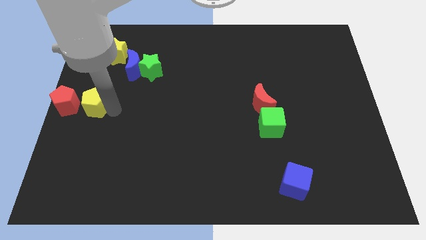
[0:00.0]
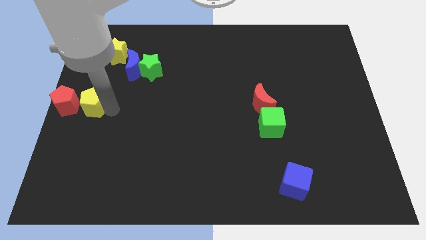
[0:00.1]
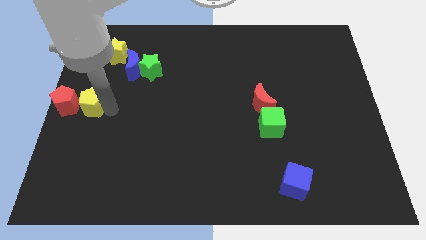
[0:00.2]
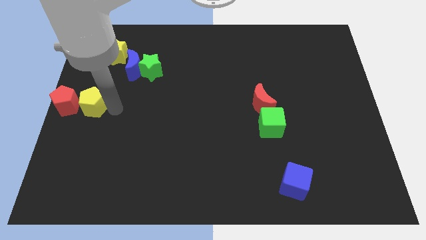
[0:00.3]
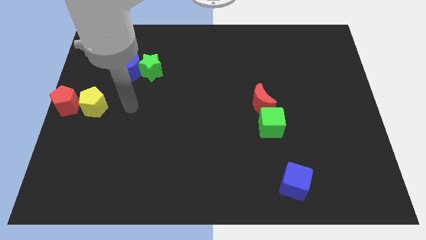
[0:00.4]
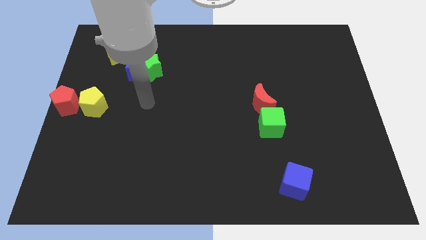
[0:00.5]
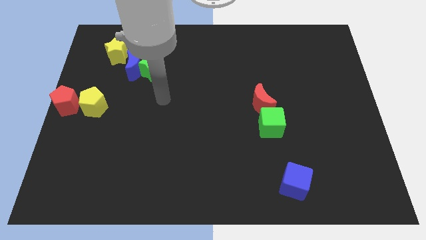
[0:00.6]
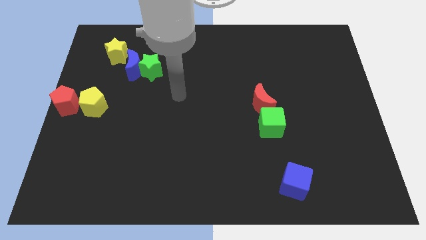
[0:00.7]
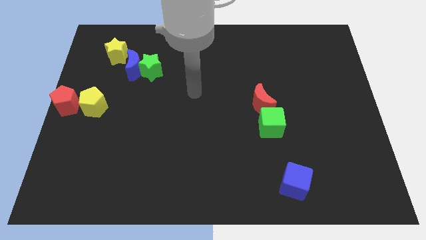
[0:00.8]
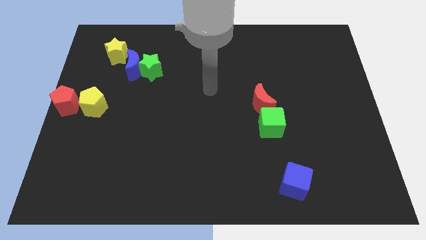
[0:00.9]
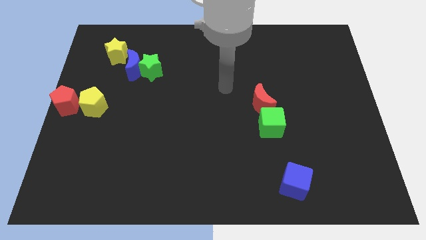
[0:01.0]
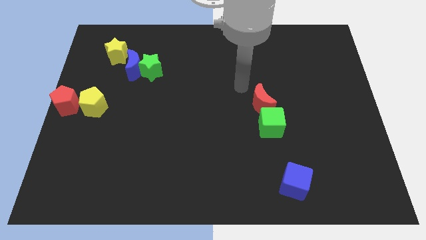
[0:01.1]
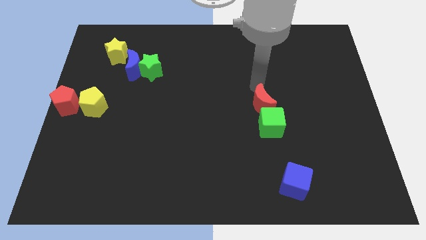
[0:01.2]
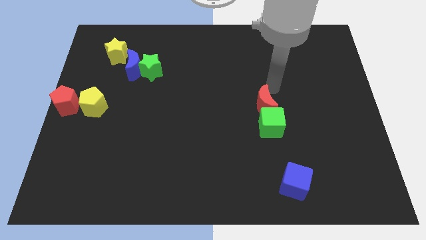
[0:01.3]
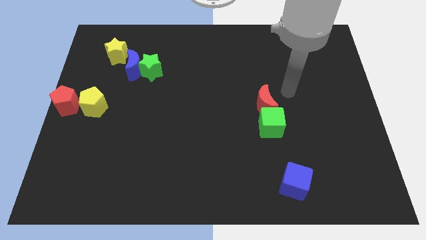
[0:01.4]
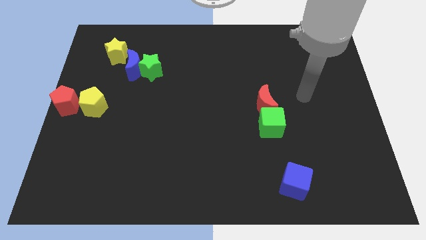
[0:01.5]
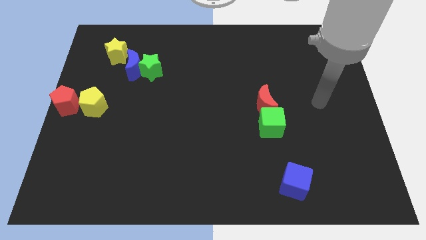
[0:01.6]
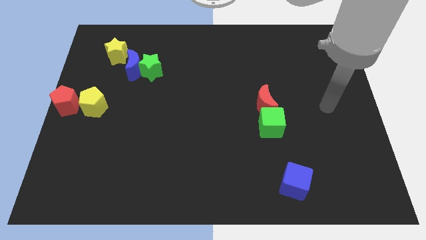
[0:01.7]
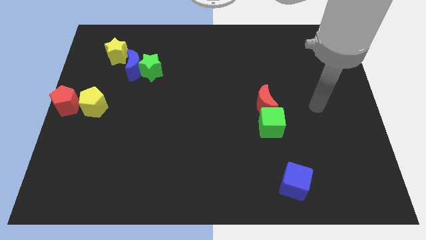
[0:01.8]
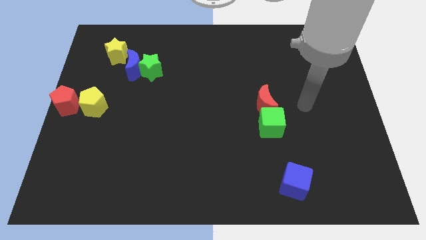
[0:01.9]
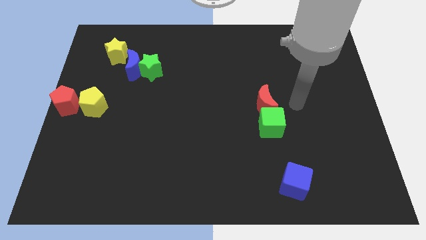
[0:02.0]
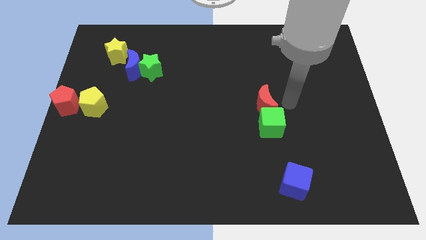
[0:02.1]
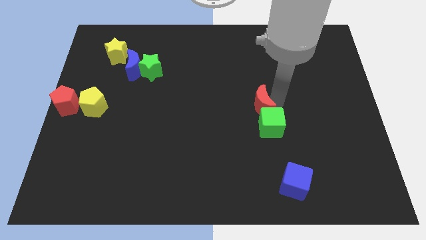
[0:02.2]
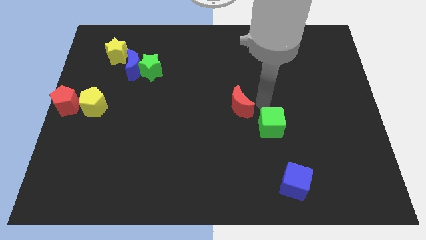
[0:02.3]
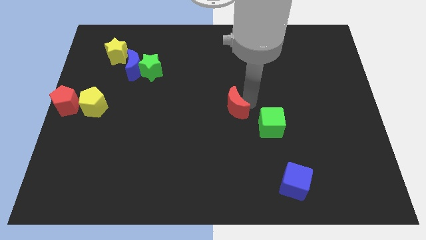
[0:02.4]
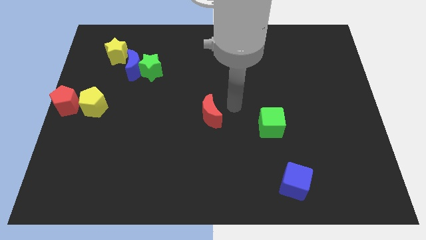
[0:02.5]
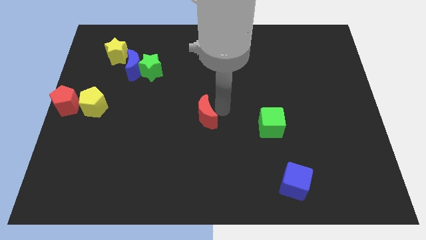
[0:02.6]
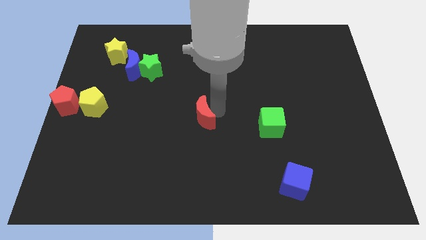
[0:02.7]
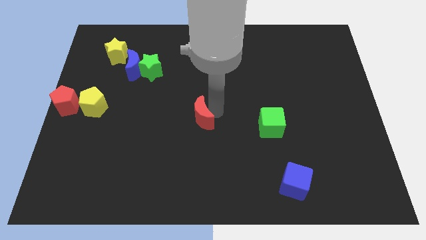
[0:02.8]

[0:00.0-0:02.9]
separate the red moon from the green cube

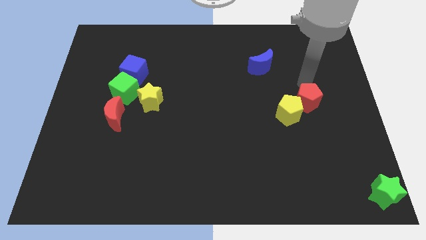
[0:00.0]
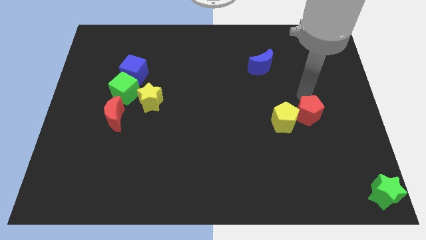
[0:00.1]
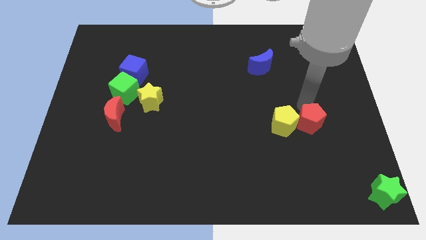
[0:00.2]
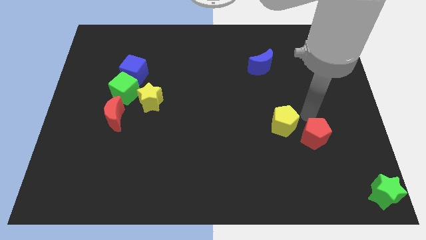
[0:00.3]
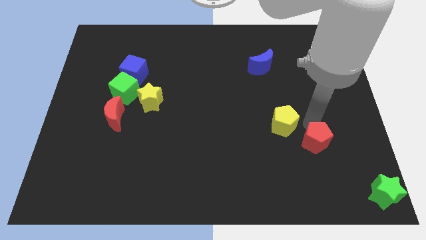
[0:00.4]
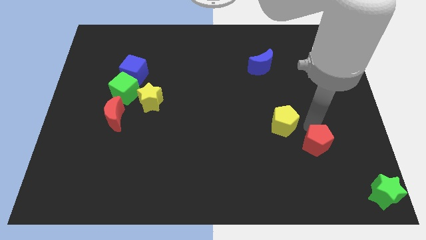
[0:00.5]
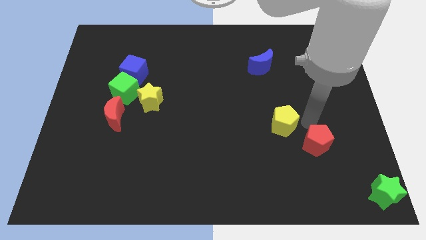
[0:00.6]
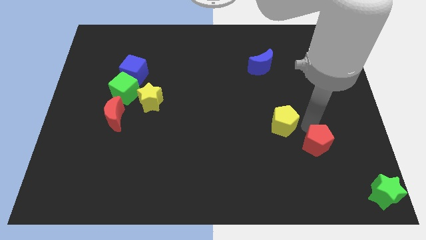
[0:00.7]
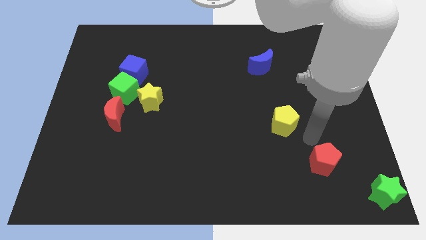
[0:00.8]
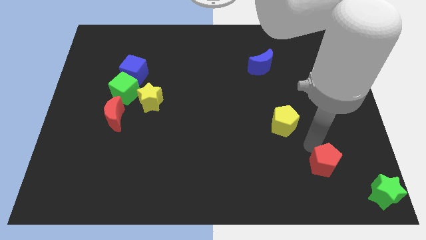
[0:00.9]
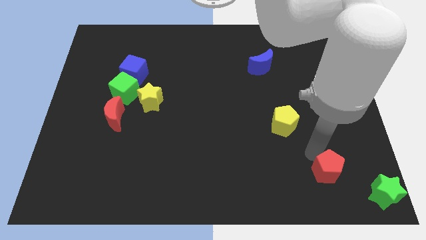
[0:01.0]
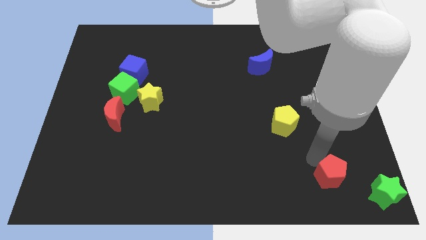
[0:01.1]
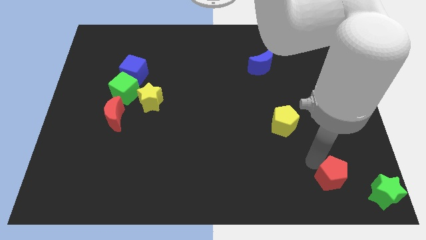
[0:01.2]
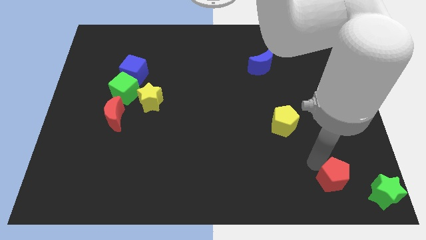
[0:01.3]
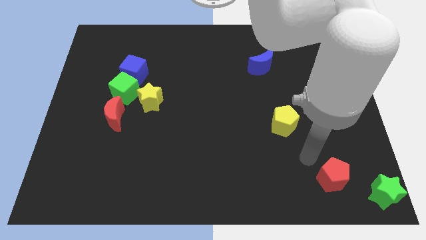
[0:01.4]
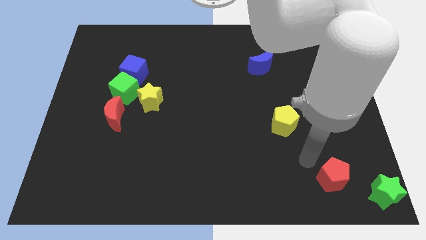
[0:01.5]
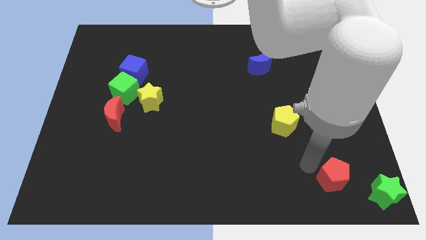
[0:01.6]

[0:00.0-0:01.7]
push the red pentagon towards the green star

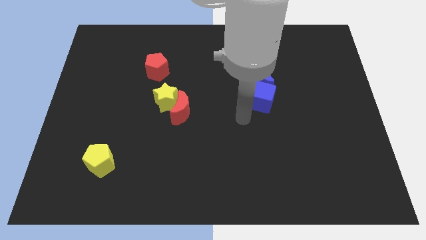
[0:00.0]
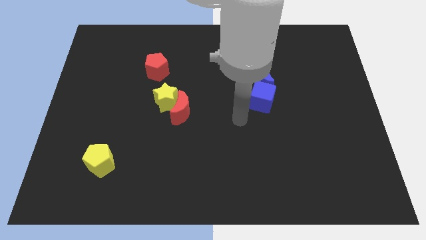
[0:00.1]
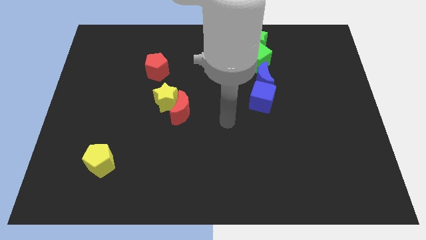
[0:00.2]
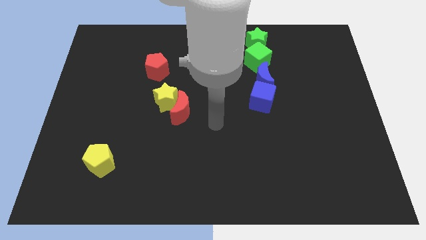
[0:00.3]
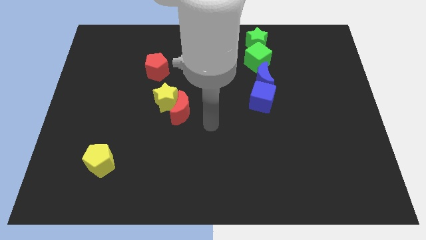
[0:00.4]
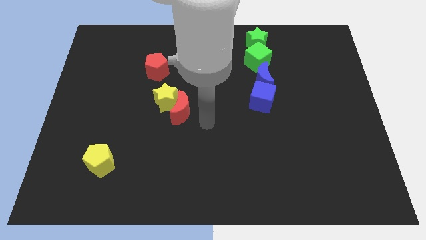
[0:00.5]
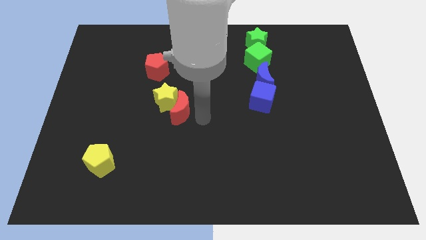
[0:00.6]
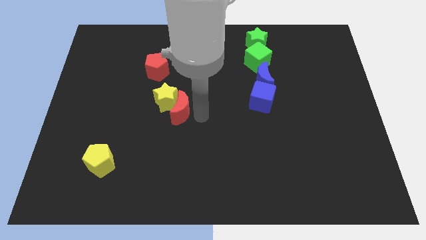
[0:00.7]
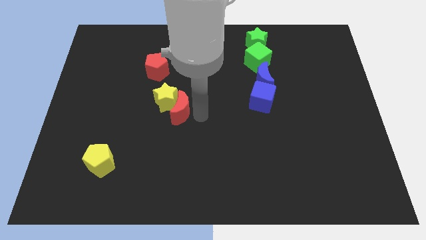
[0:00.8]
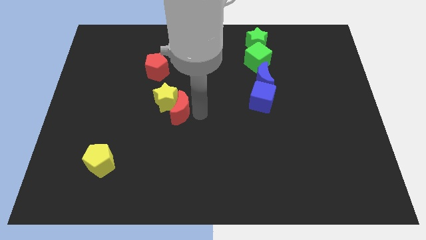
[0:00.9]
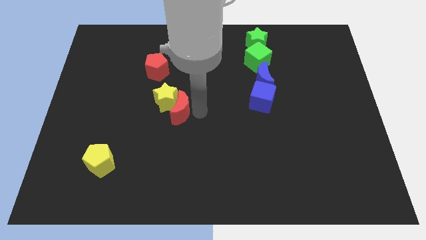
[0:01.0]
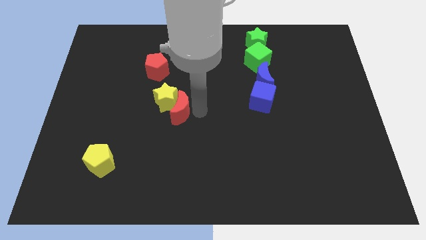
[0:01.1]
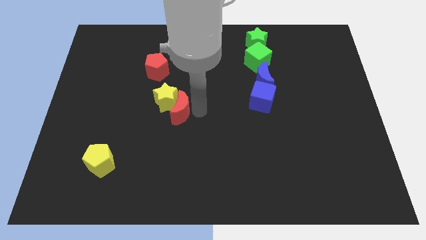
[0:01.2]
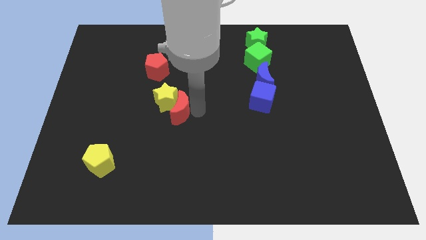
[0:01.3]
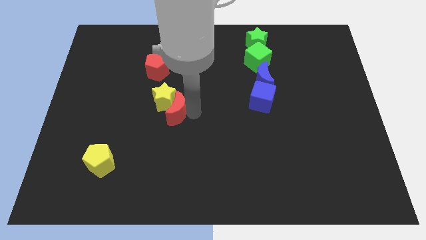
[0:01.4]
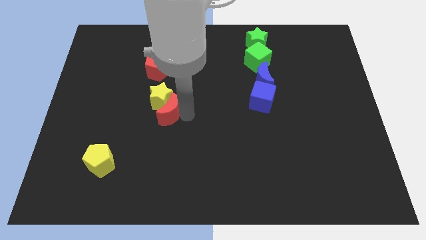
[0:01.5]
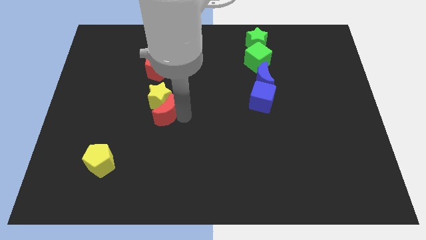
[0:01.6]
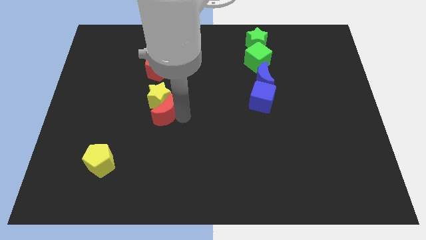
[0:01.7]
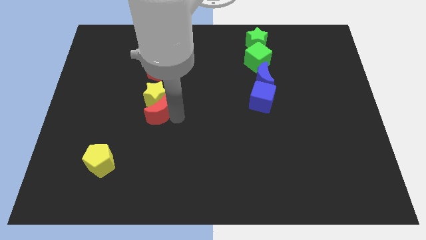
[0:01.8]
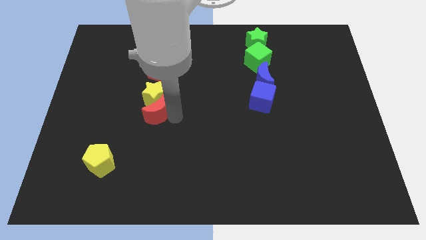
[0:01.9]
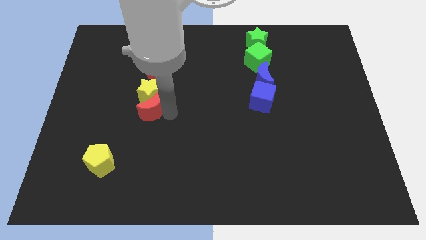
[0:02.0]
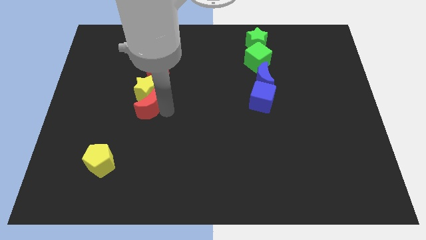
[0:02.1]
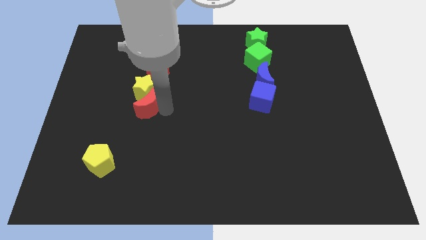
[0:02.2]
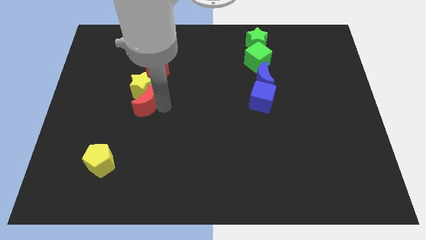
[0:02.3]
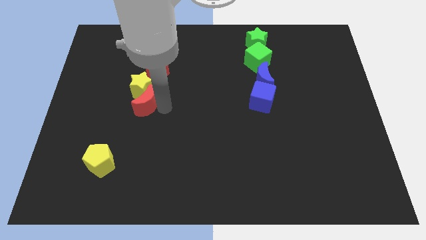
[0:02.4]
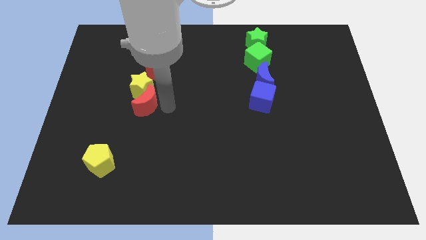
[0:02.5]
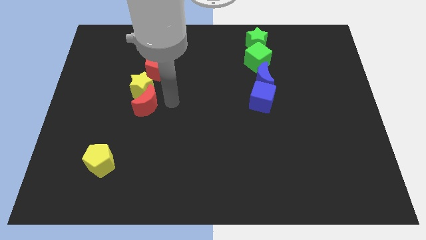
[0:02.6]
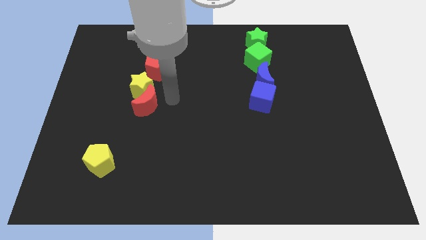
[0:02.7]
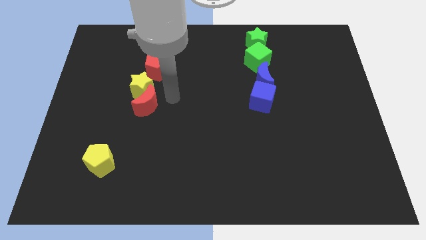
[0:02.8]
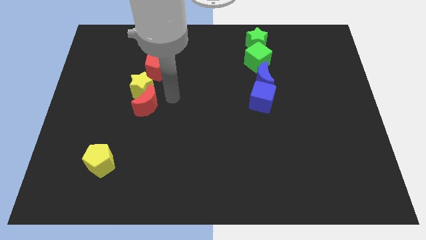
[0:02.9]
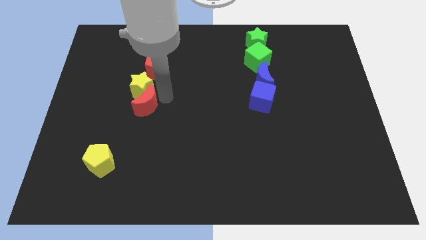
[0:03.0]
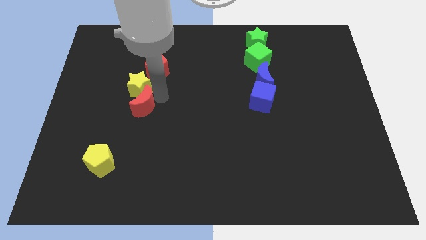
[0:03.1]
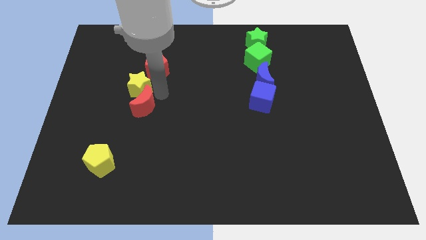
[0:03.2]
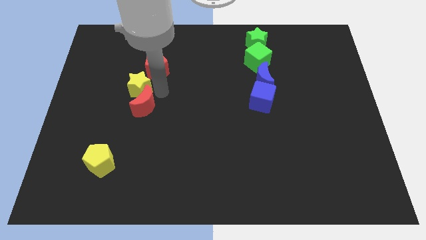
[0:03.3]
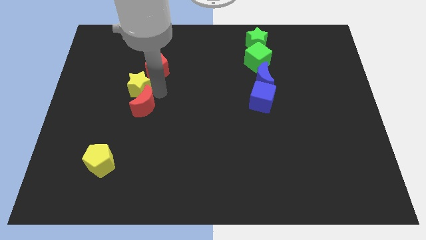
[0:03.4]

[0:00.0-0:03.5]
push the red moon along with the yellow star to the left side of the board

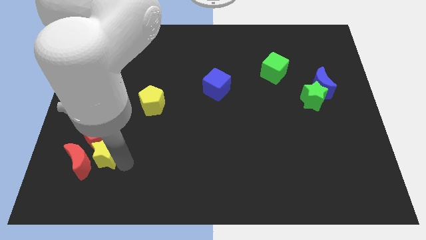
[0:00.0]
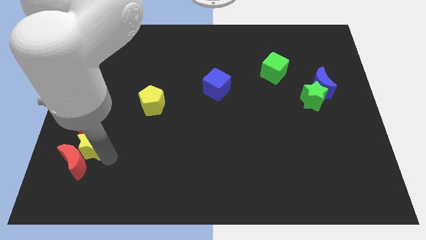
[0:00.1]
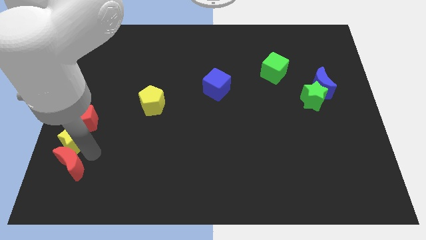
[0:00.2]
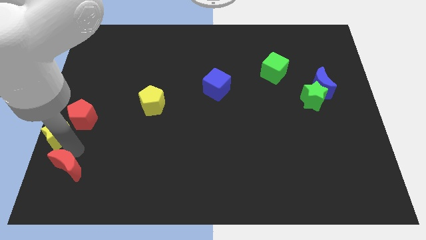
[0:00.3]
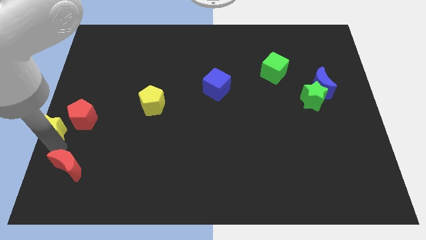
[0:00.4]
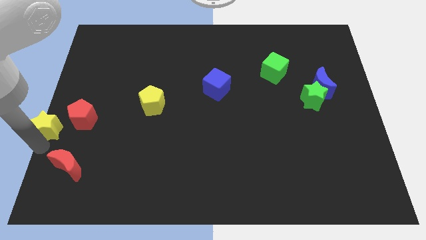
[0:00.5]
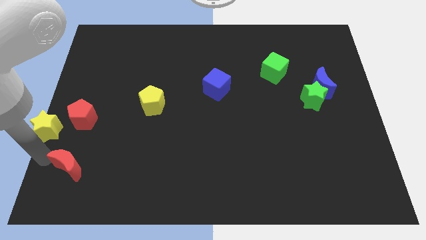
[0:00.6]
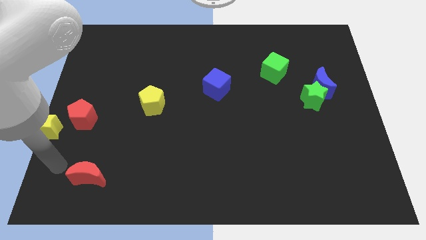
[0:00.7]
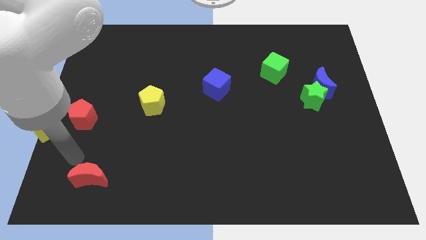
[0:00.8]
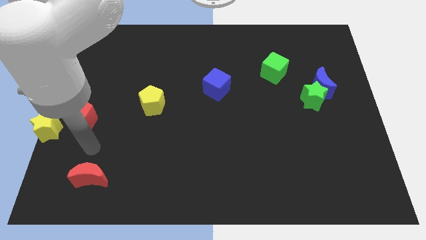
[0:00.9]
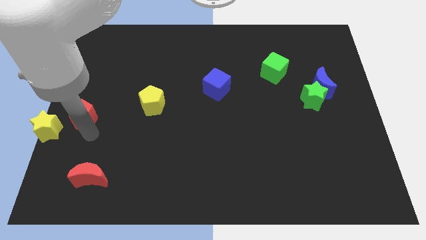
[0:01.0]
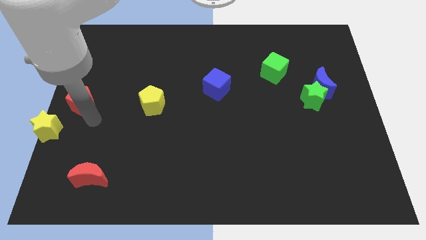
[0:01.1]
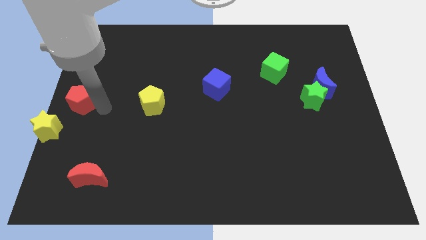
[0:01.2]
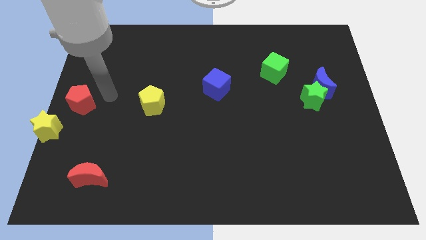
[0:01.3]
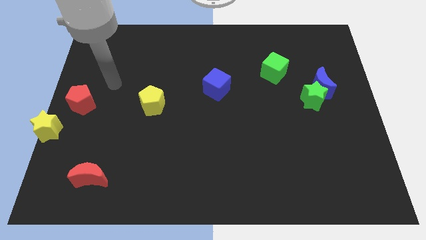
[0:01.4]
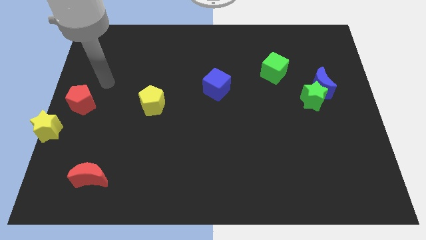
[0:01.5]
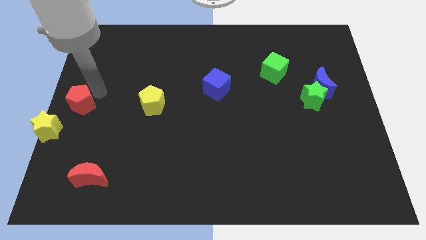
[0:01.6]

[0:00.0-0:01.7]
point your arm above red pentagon
